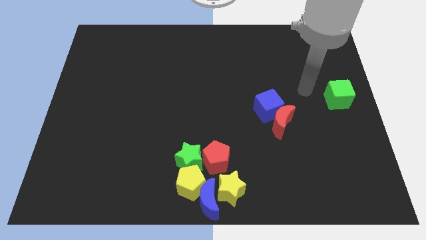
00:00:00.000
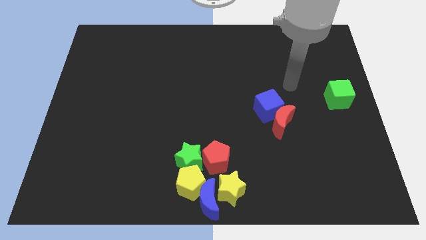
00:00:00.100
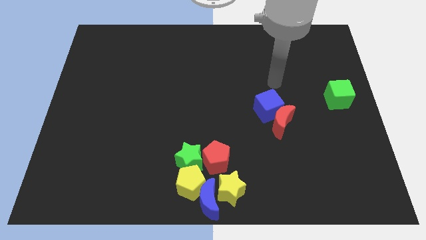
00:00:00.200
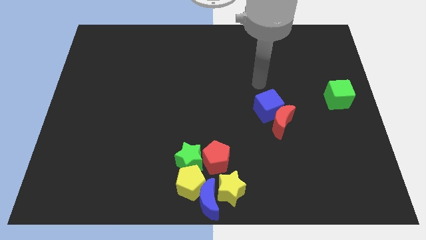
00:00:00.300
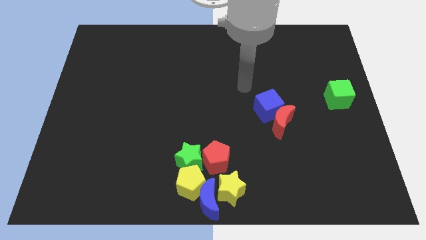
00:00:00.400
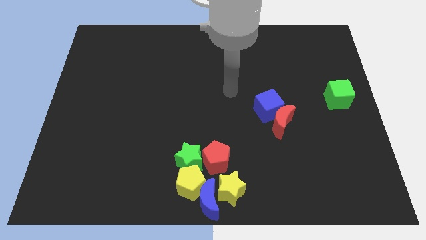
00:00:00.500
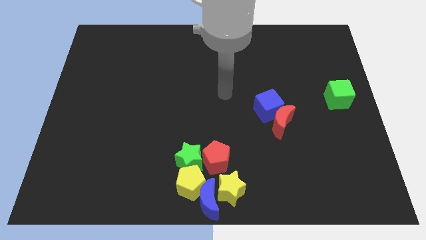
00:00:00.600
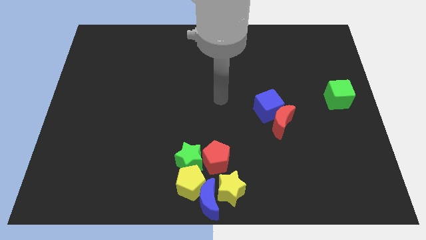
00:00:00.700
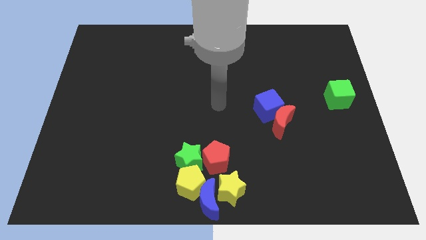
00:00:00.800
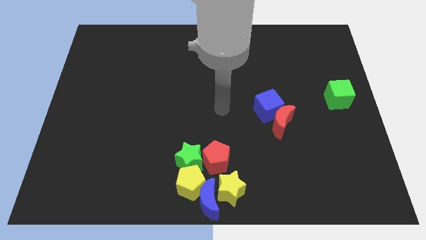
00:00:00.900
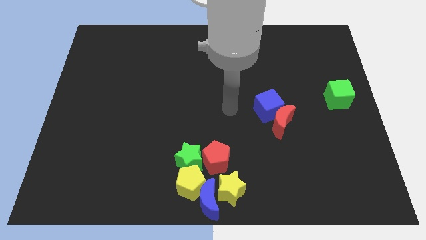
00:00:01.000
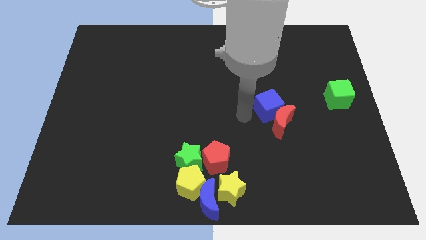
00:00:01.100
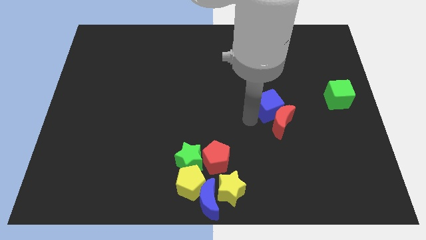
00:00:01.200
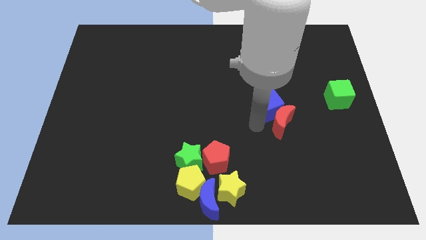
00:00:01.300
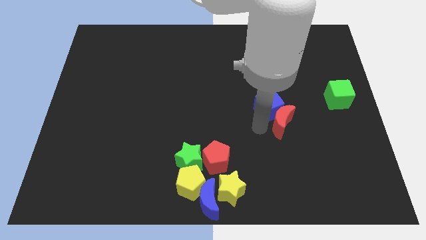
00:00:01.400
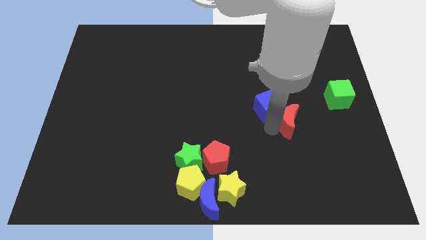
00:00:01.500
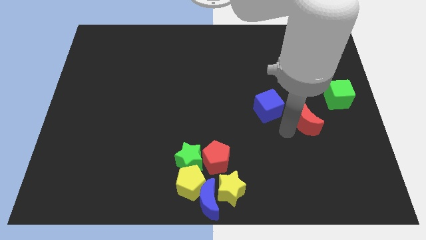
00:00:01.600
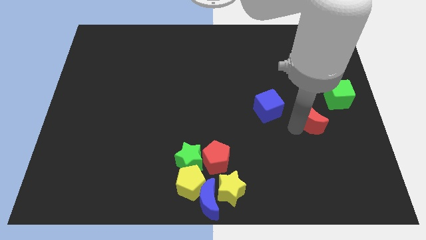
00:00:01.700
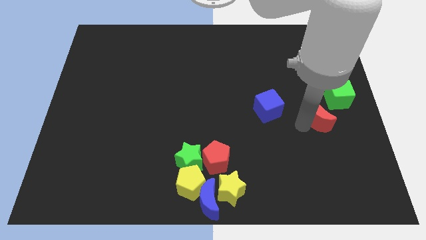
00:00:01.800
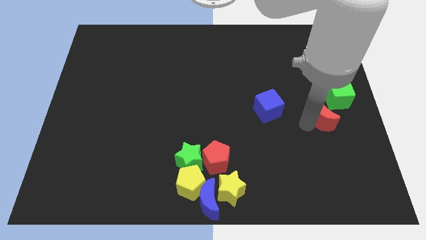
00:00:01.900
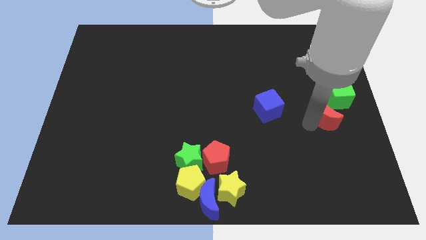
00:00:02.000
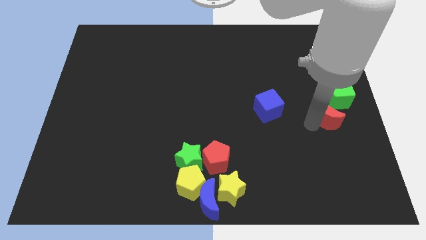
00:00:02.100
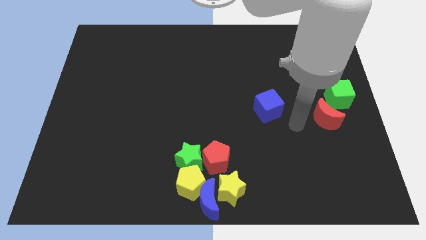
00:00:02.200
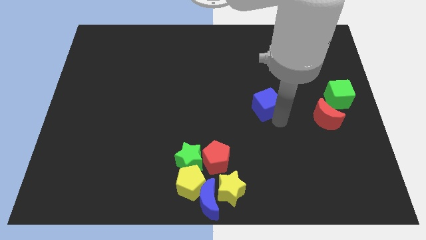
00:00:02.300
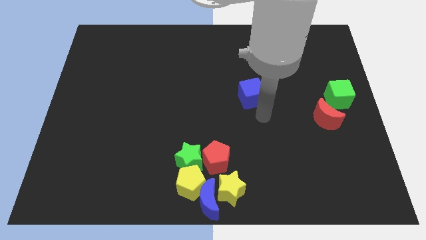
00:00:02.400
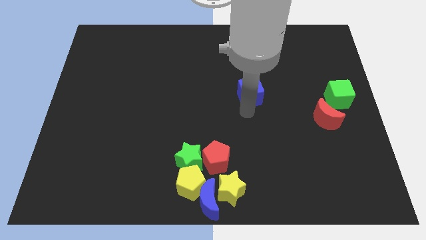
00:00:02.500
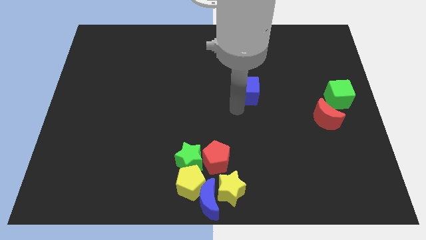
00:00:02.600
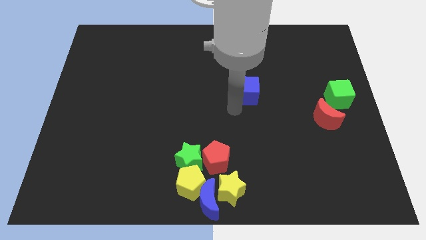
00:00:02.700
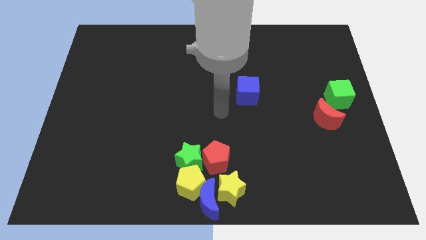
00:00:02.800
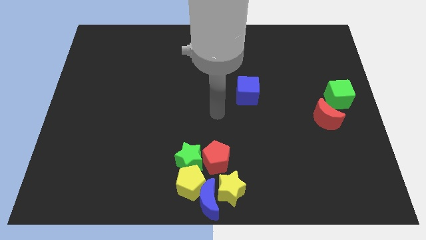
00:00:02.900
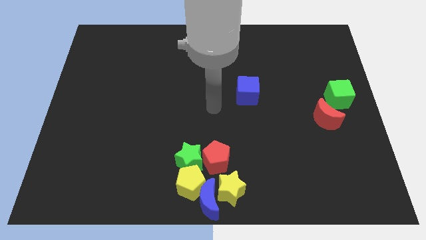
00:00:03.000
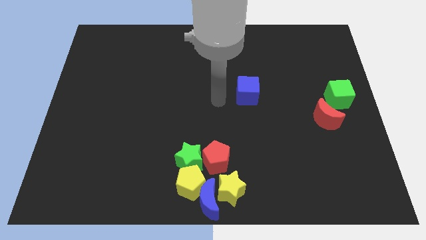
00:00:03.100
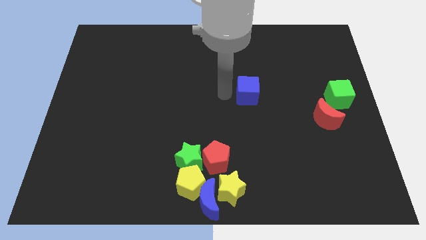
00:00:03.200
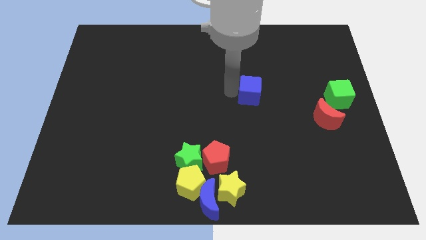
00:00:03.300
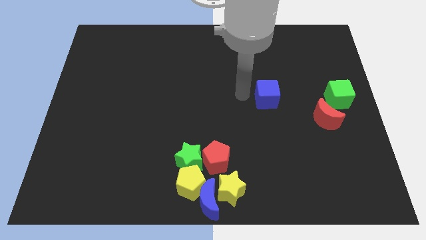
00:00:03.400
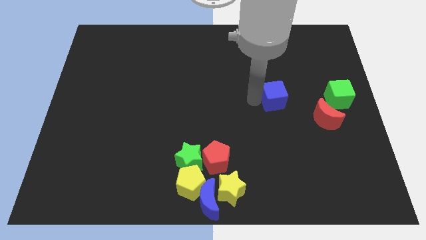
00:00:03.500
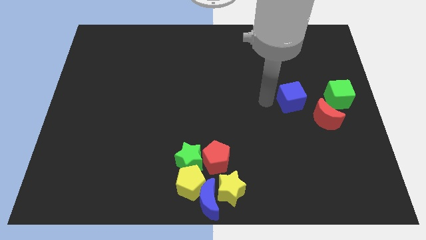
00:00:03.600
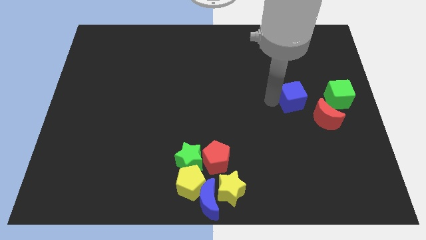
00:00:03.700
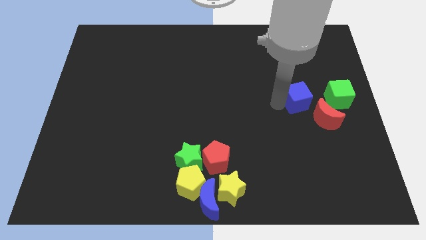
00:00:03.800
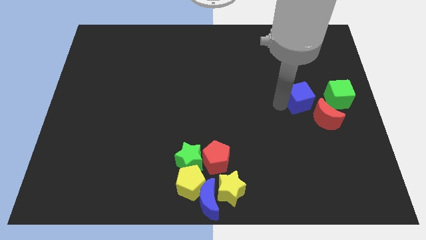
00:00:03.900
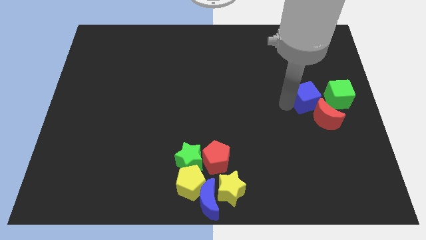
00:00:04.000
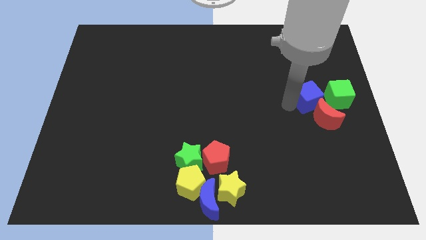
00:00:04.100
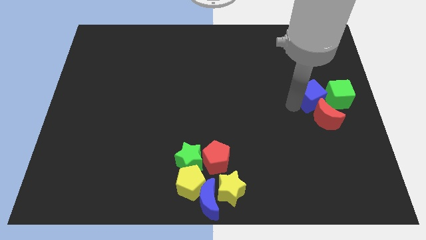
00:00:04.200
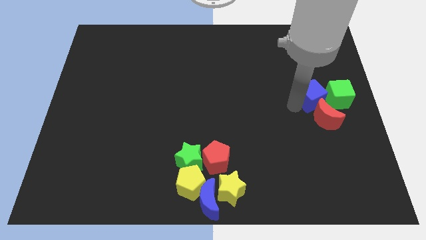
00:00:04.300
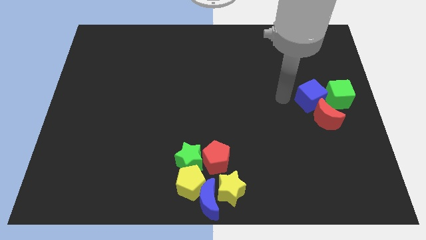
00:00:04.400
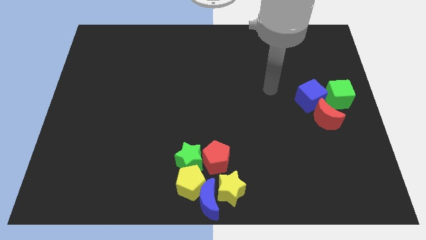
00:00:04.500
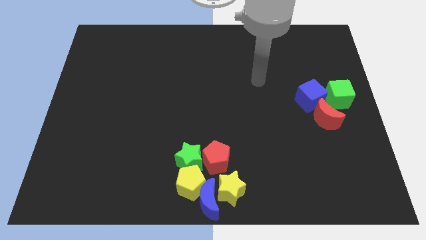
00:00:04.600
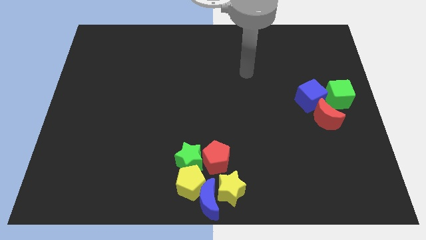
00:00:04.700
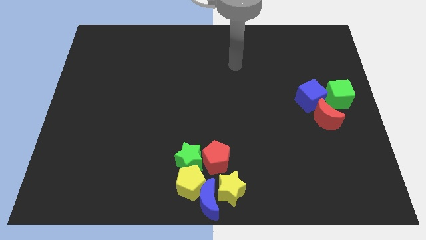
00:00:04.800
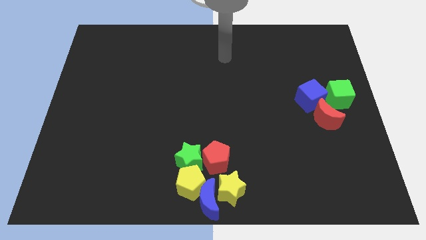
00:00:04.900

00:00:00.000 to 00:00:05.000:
move the red moon and blue cube close to the green cube

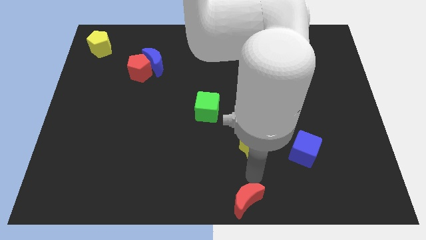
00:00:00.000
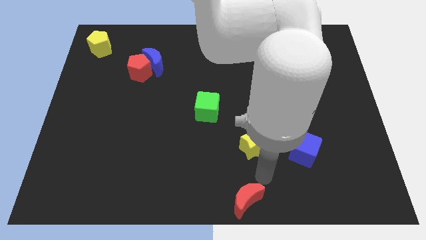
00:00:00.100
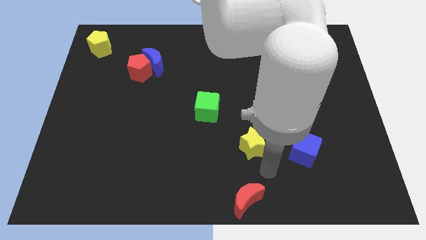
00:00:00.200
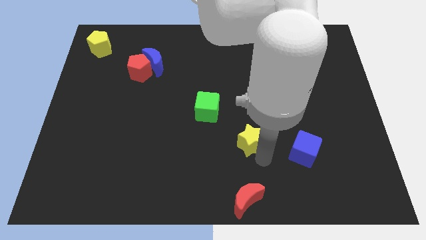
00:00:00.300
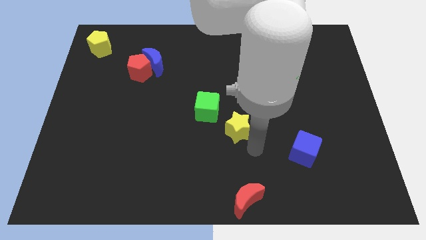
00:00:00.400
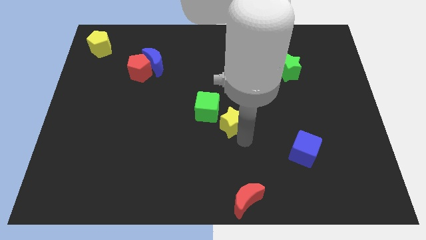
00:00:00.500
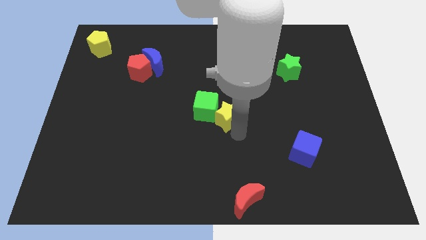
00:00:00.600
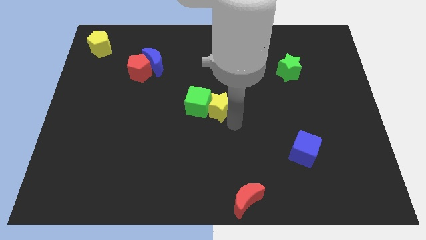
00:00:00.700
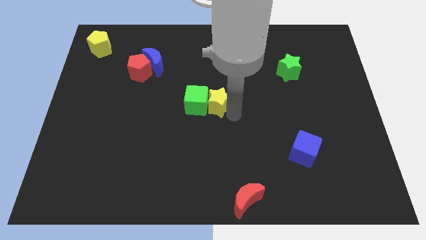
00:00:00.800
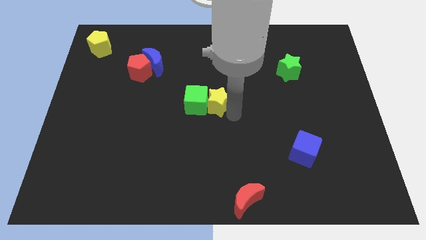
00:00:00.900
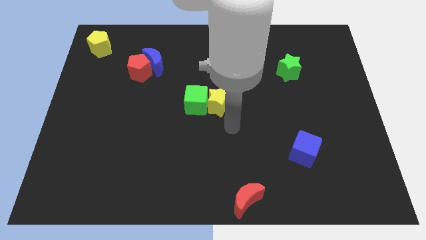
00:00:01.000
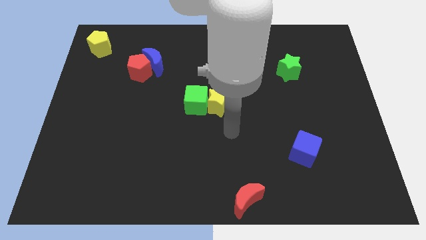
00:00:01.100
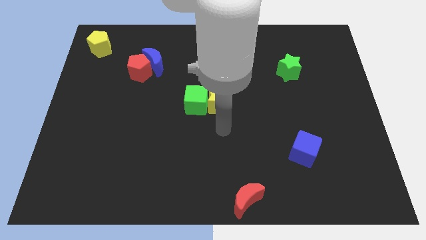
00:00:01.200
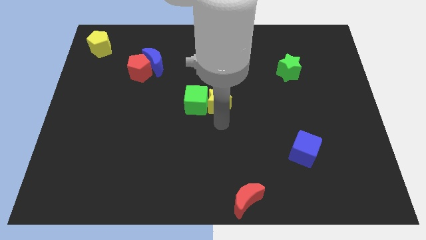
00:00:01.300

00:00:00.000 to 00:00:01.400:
push yellow star into the green cube

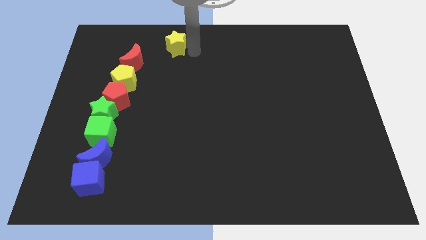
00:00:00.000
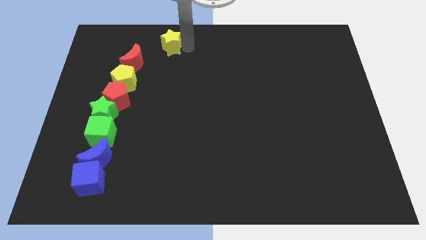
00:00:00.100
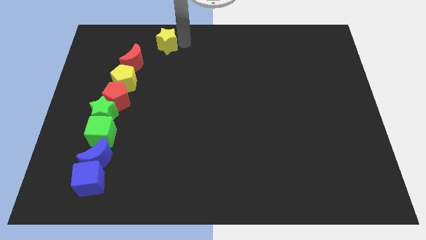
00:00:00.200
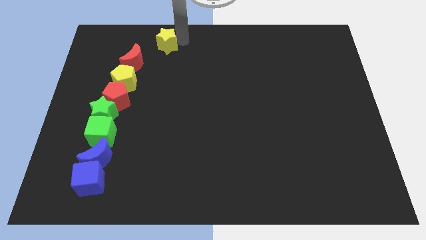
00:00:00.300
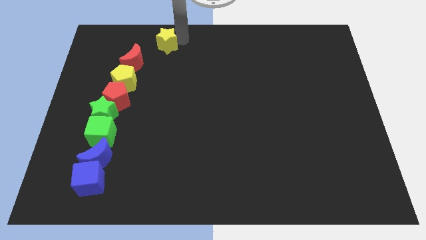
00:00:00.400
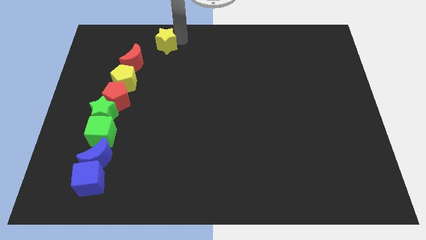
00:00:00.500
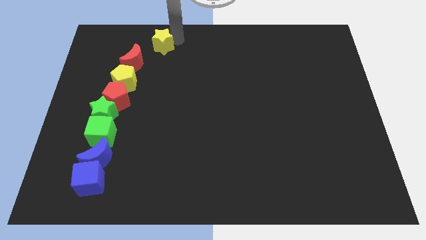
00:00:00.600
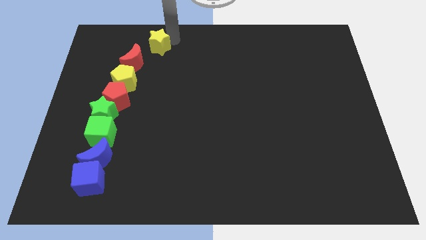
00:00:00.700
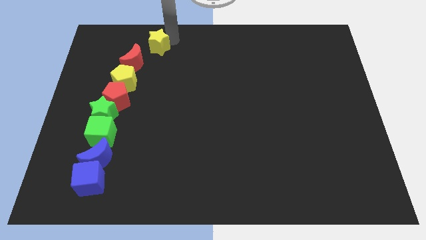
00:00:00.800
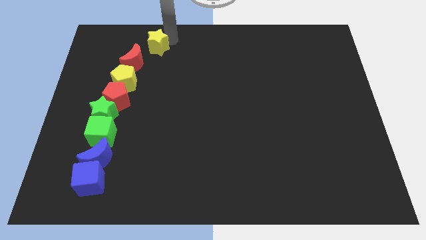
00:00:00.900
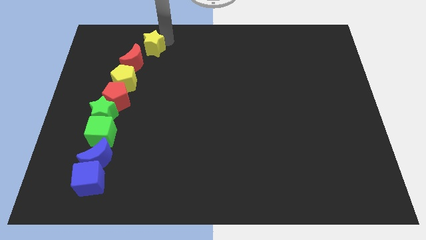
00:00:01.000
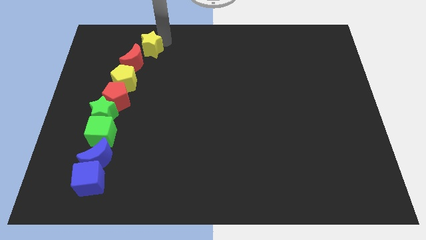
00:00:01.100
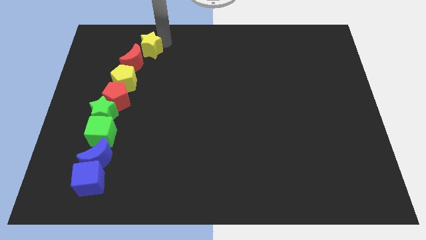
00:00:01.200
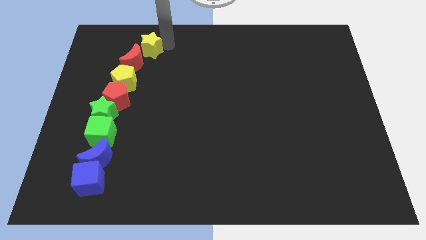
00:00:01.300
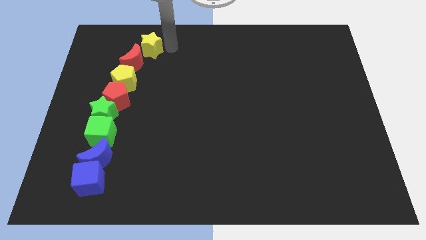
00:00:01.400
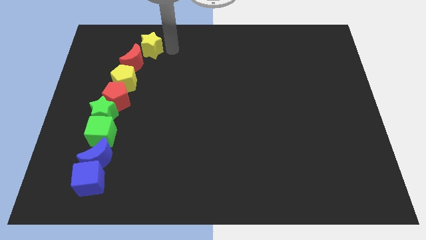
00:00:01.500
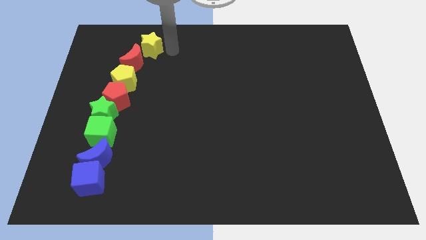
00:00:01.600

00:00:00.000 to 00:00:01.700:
place yellow star above red moon

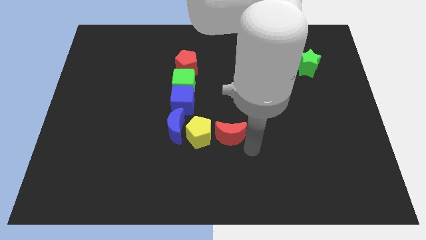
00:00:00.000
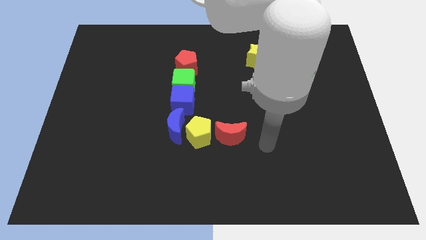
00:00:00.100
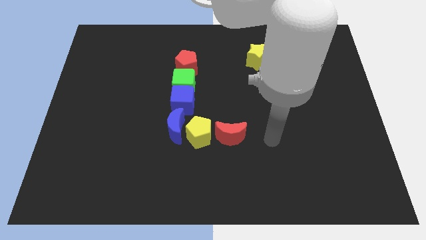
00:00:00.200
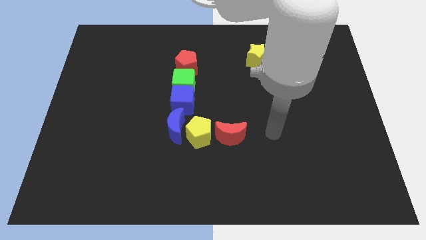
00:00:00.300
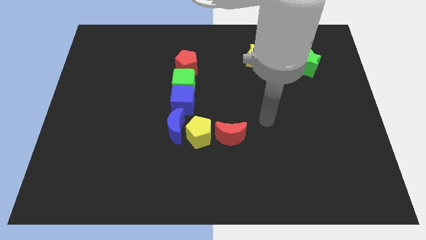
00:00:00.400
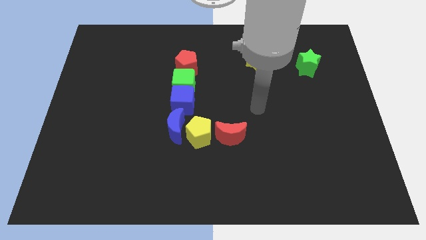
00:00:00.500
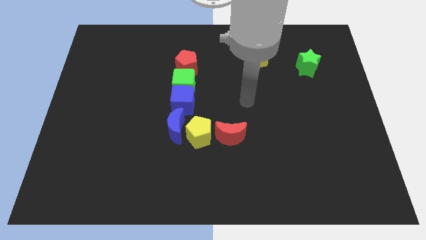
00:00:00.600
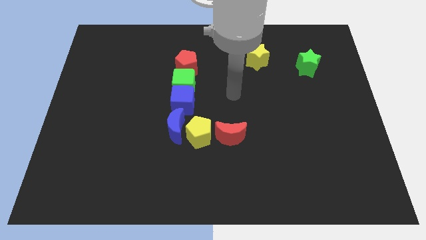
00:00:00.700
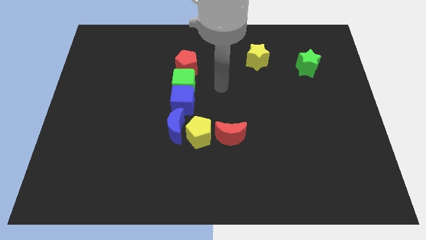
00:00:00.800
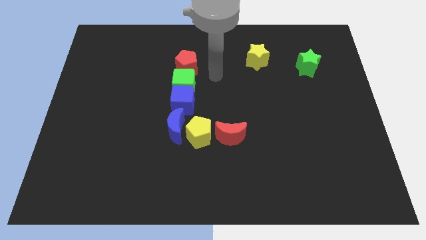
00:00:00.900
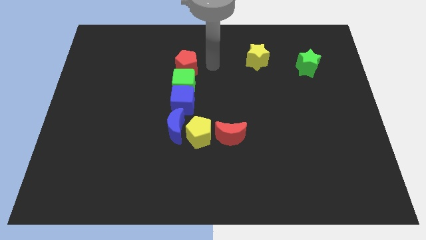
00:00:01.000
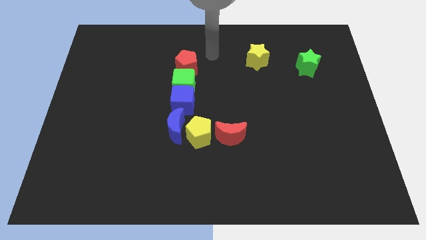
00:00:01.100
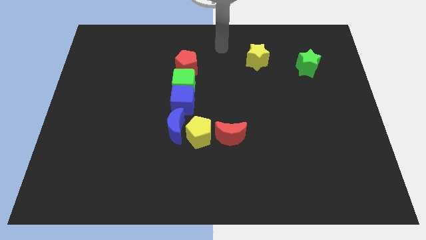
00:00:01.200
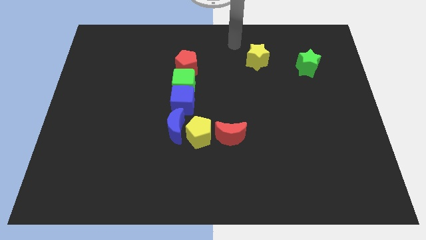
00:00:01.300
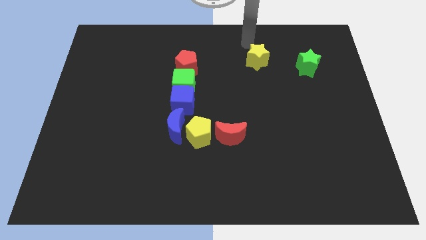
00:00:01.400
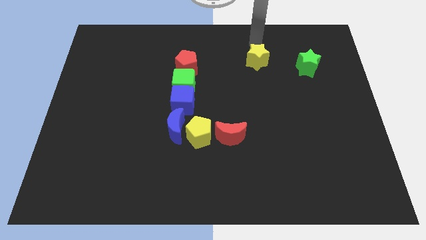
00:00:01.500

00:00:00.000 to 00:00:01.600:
place the arm above the yellow star
